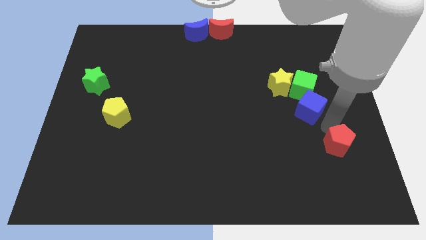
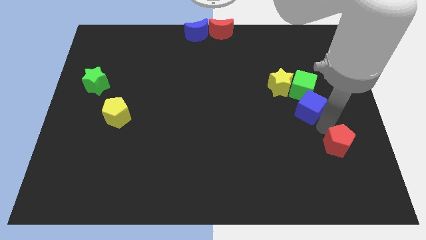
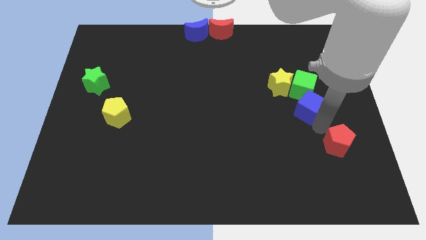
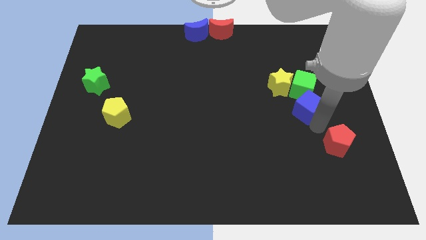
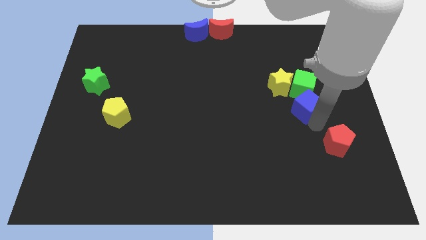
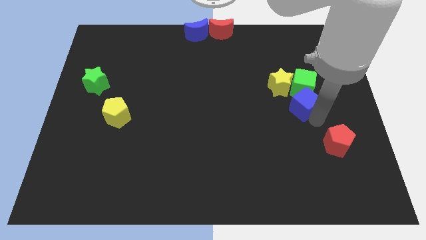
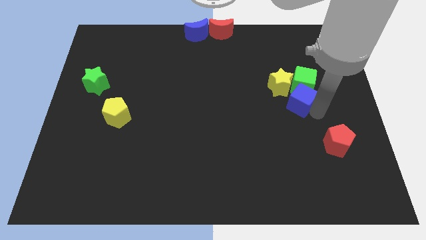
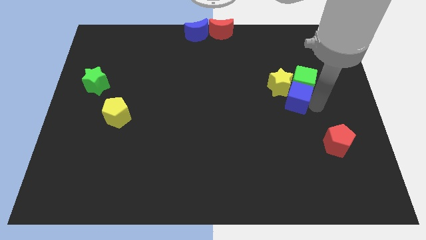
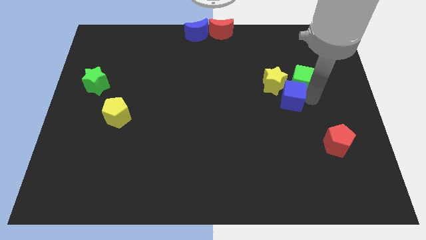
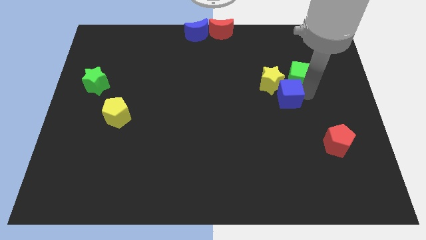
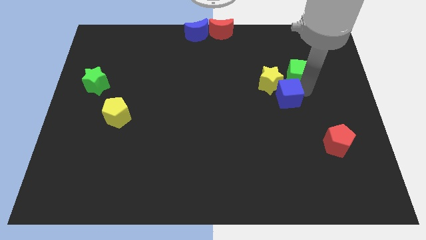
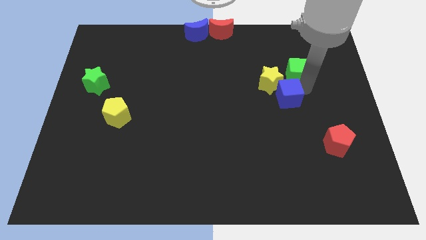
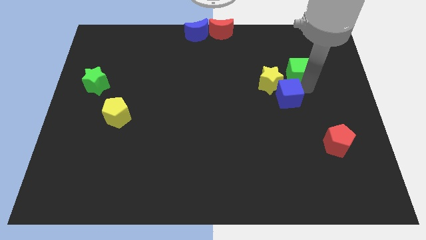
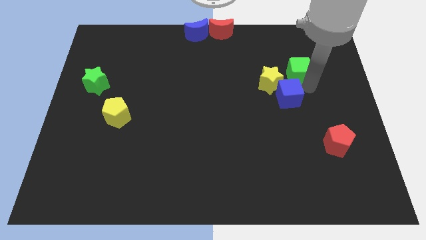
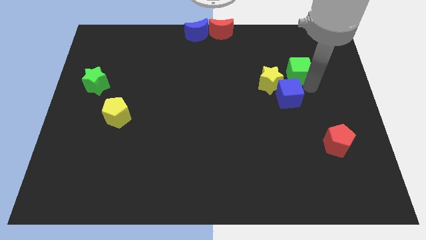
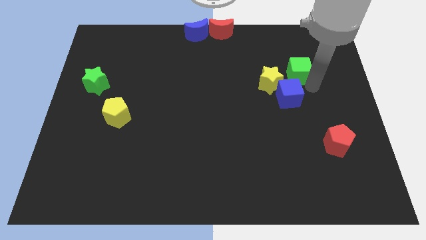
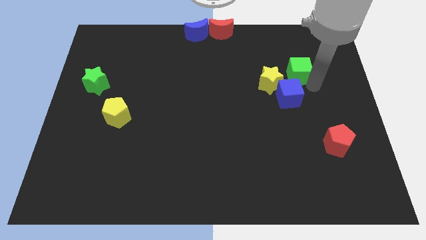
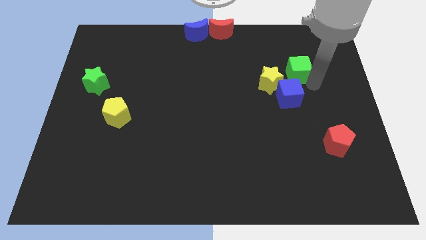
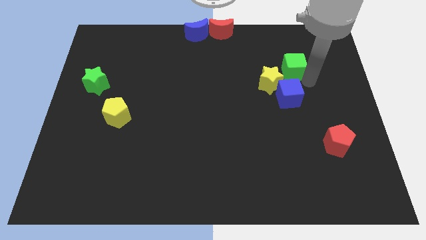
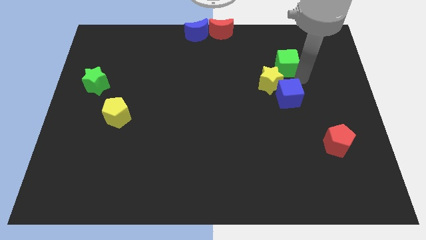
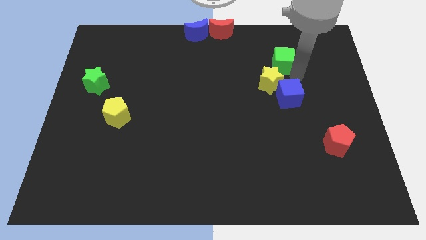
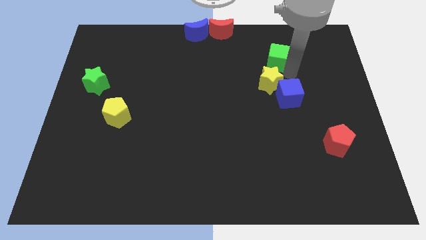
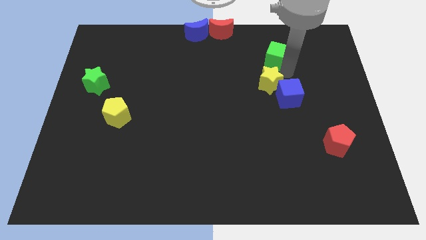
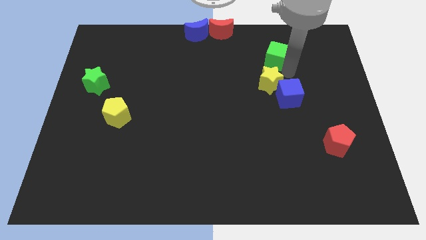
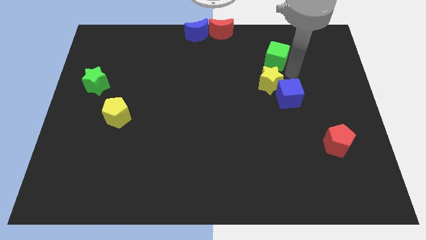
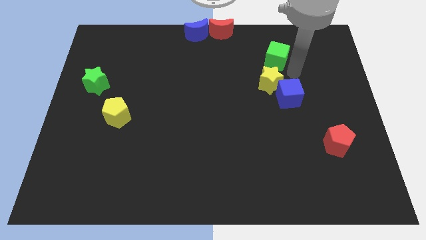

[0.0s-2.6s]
separate green cube from yellow star

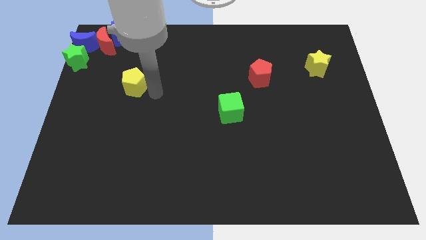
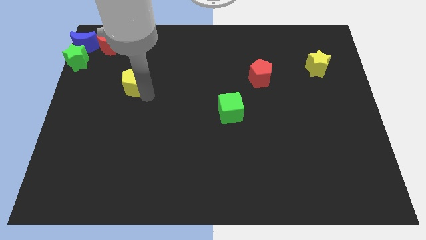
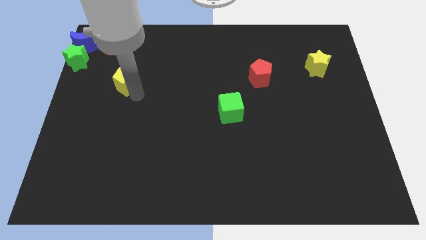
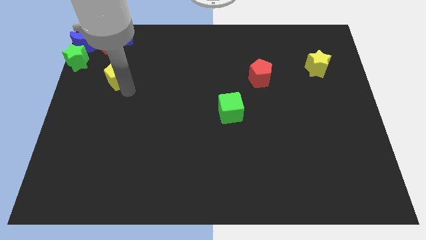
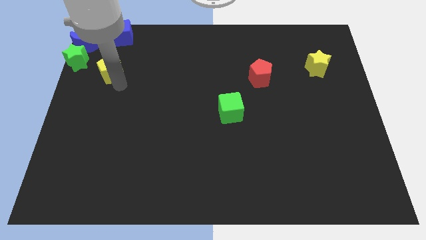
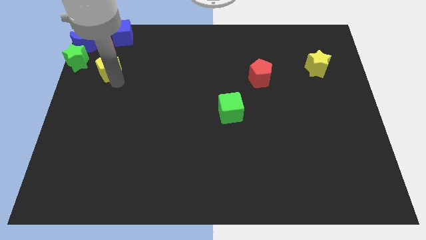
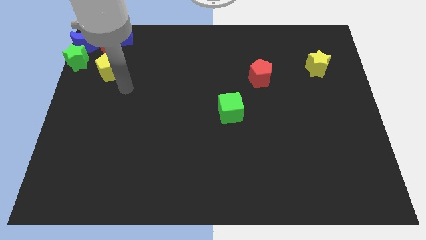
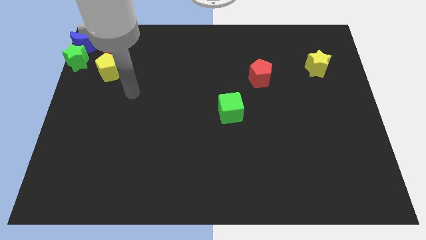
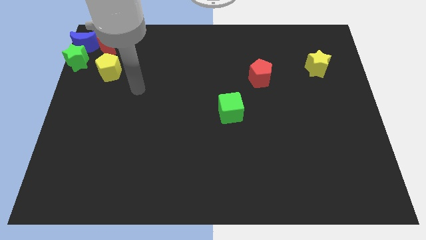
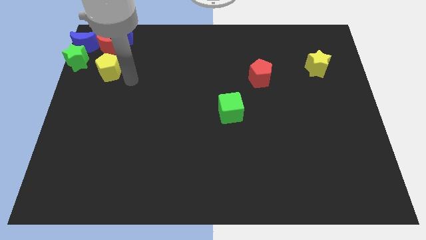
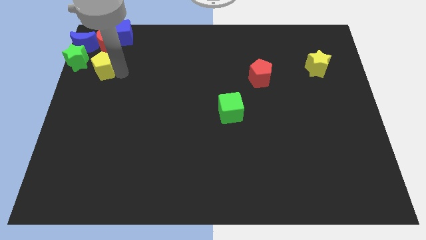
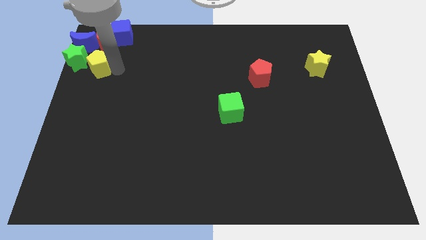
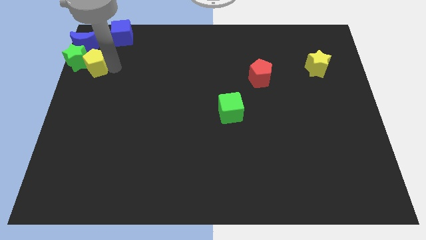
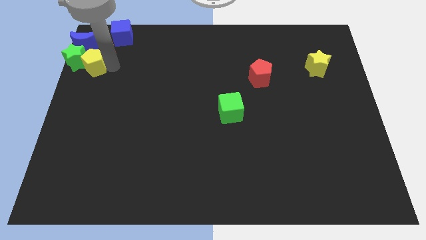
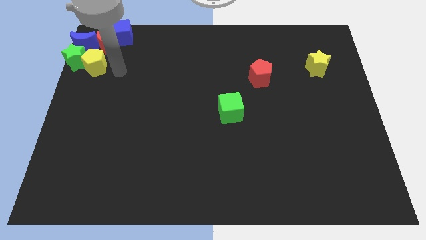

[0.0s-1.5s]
push the yellow pentagon to the right of the green star

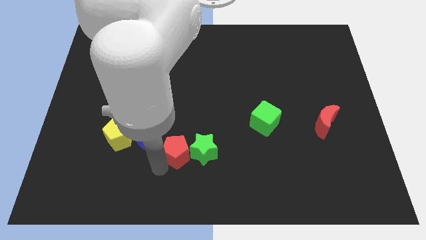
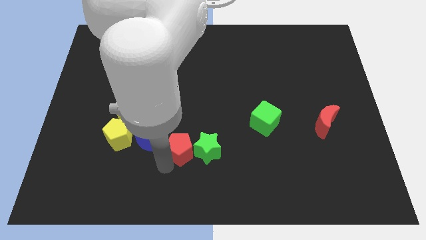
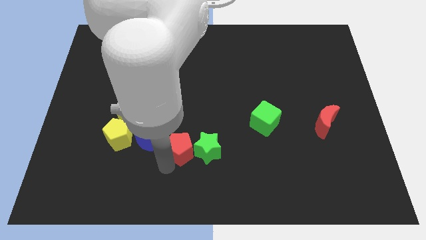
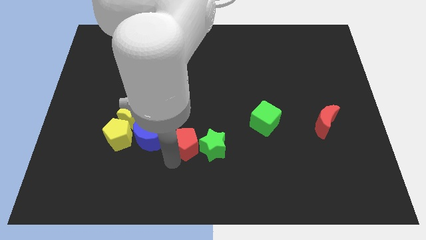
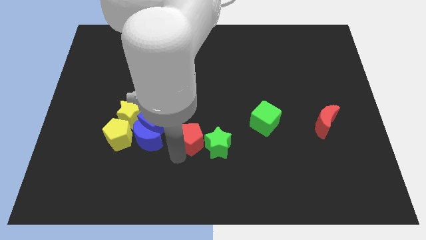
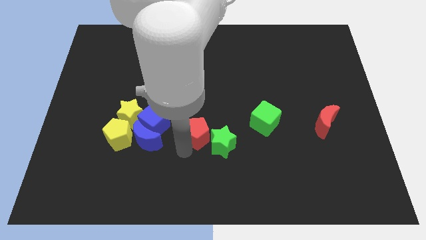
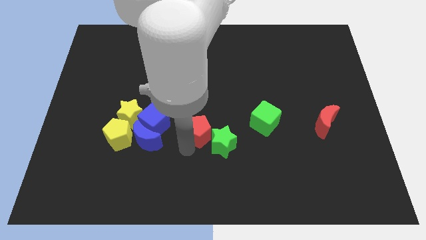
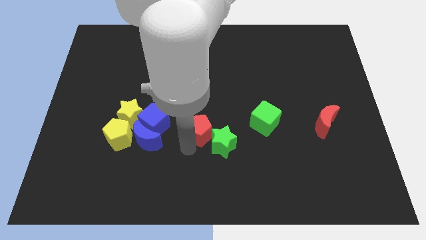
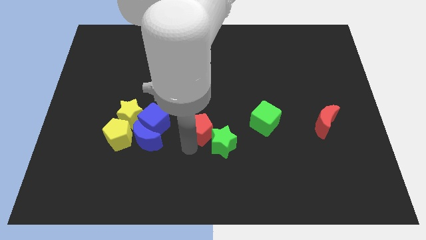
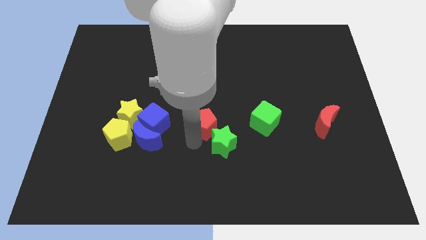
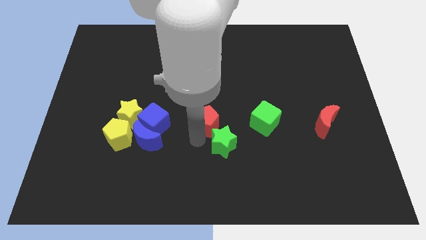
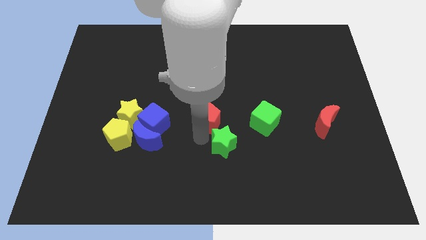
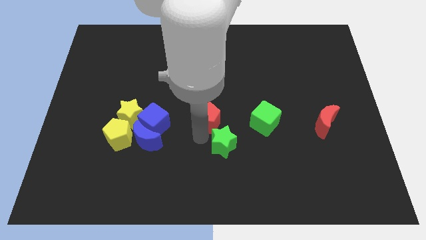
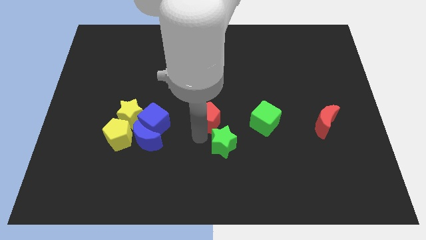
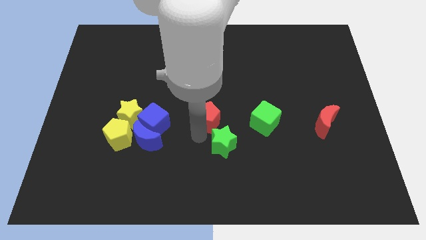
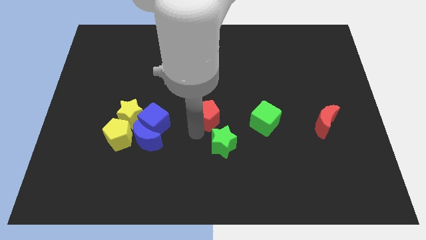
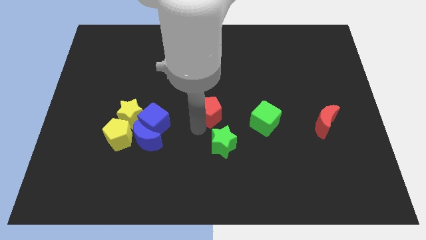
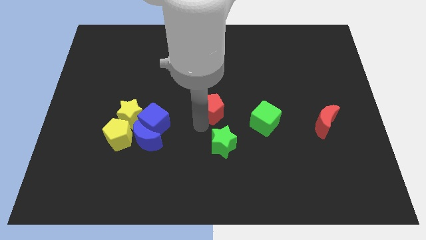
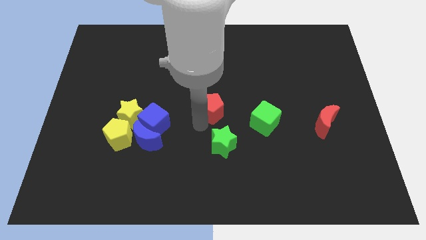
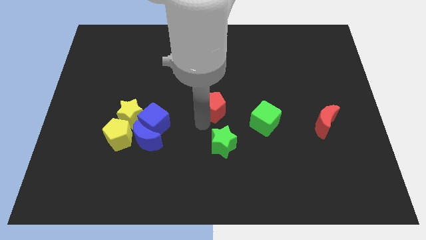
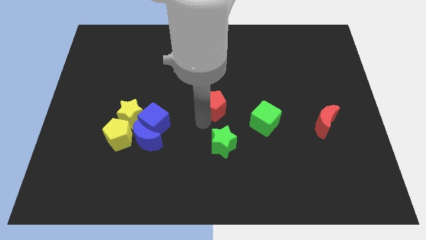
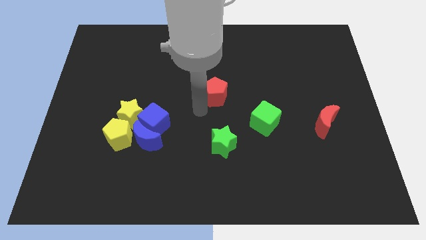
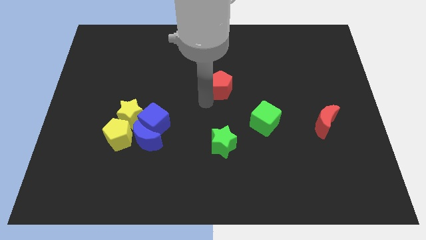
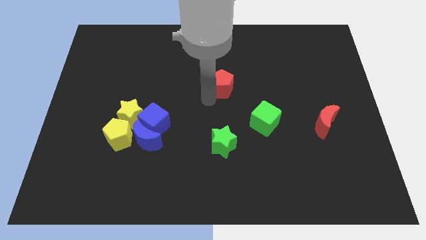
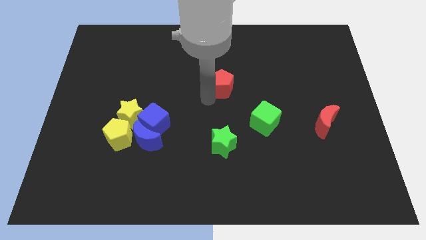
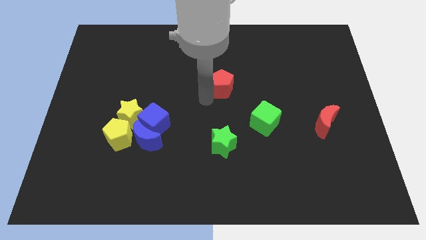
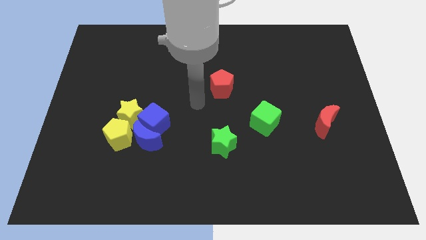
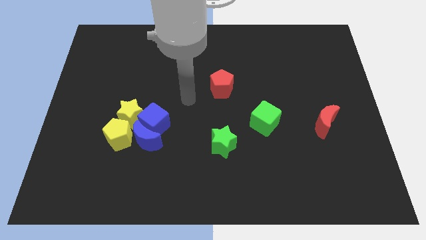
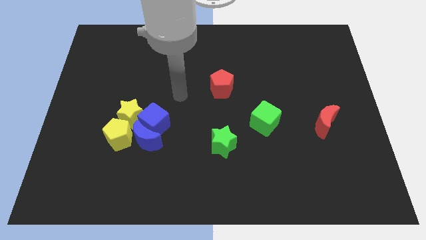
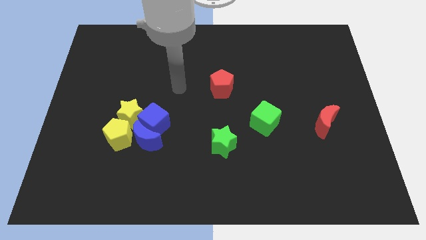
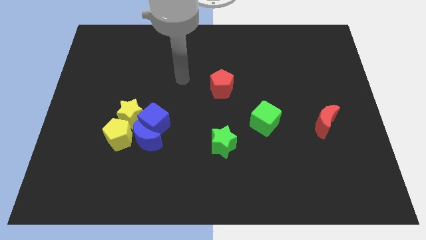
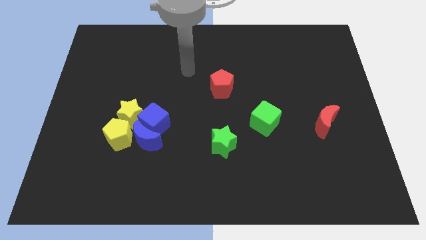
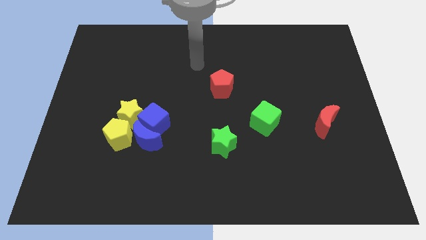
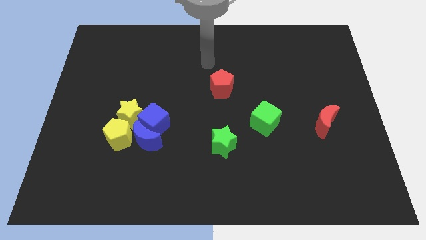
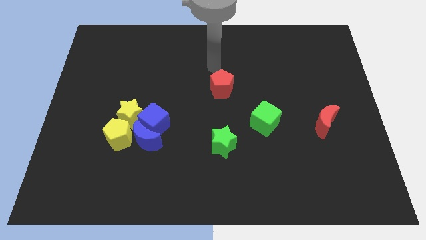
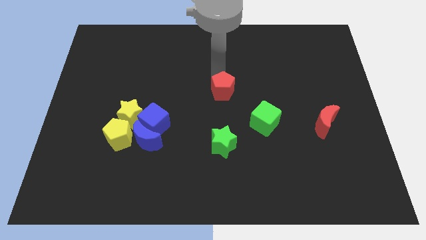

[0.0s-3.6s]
move the red pentagon vertically above the green star

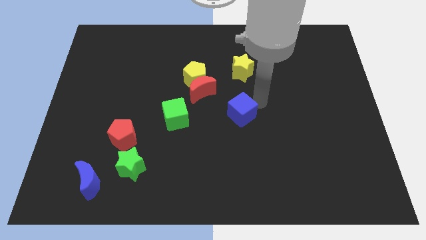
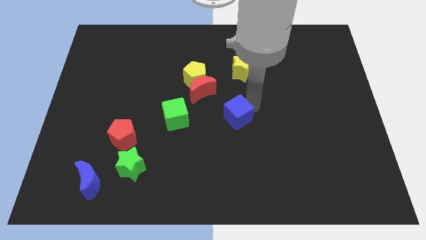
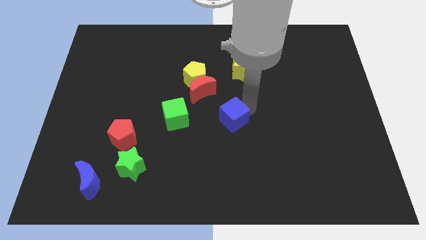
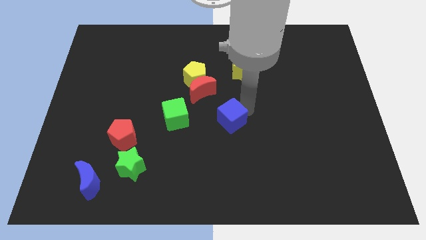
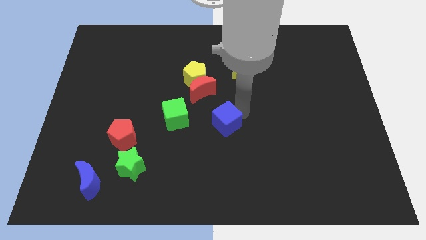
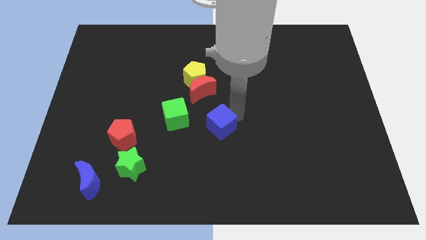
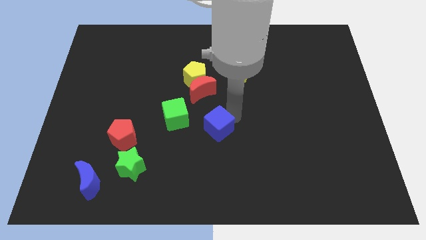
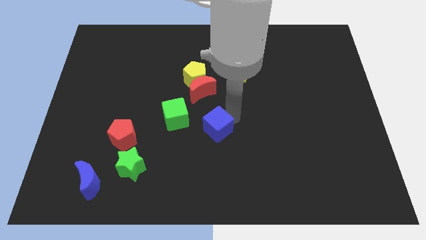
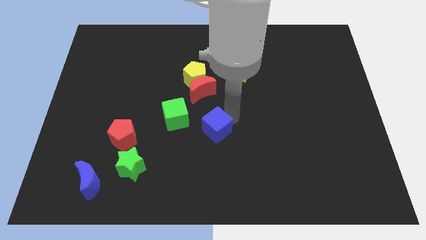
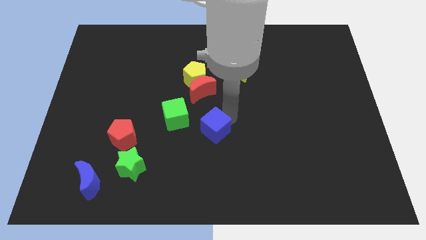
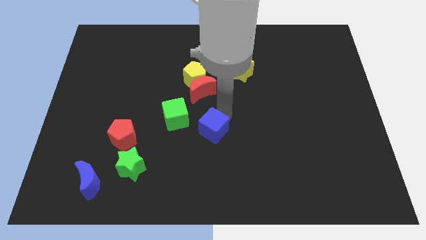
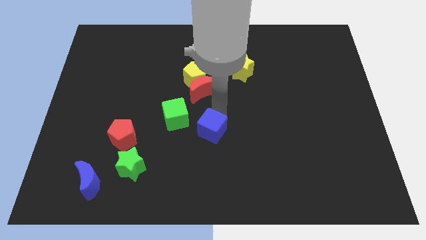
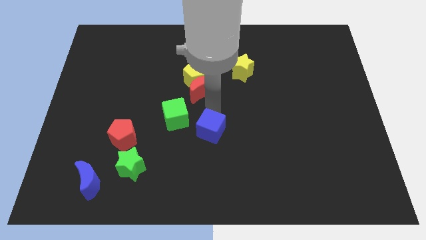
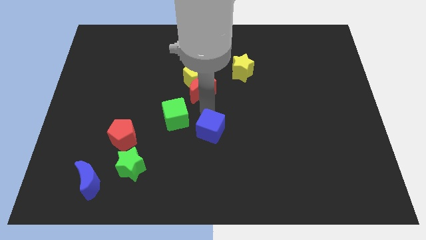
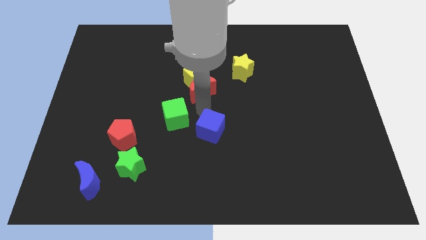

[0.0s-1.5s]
put the blue cube below the red moon
